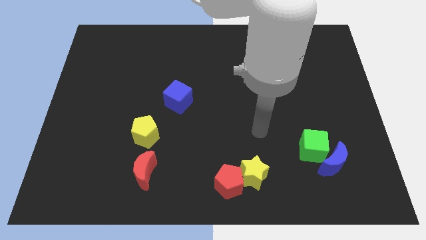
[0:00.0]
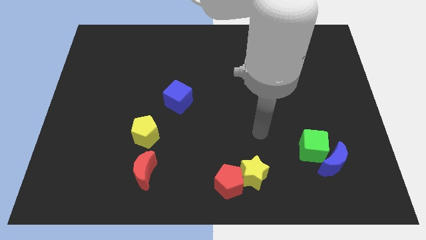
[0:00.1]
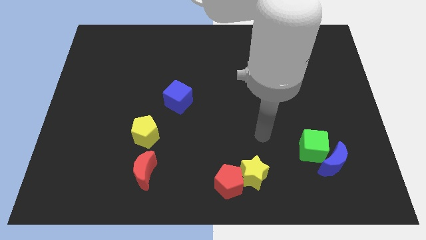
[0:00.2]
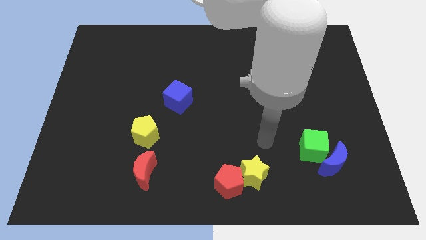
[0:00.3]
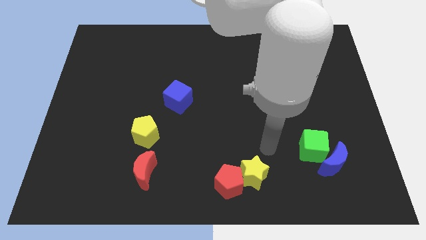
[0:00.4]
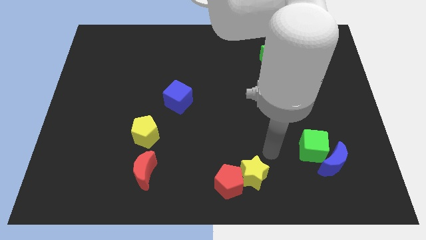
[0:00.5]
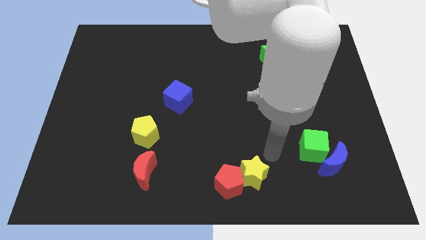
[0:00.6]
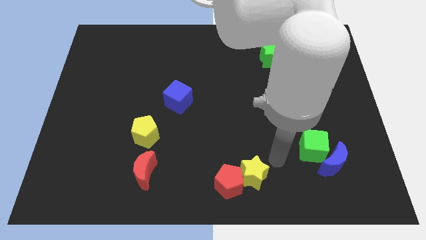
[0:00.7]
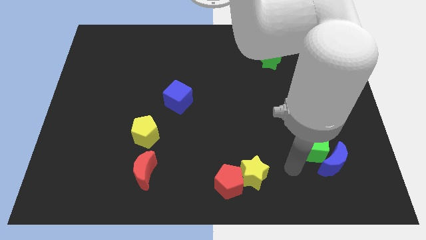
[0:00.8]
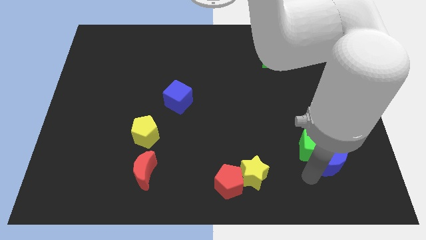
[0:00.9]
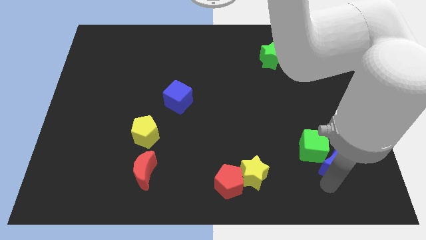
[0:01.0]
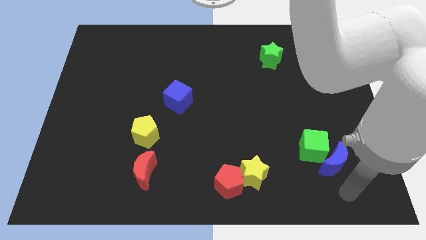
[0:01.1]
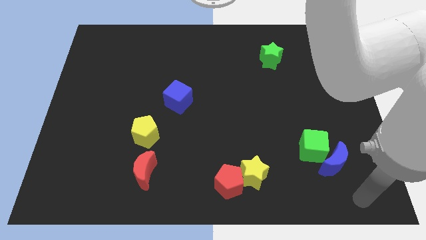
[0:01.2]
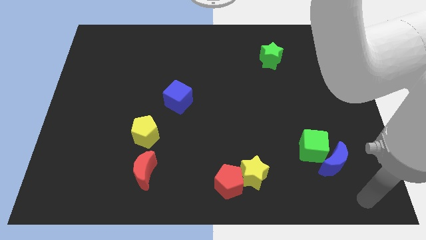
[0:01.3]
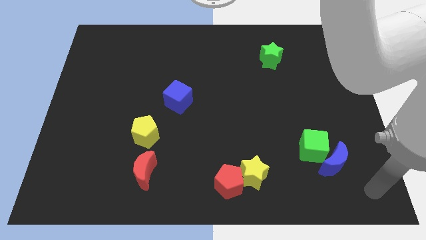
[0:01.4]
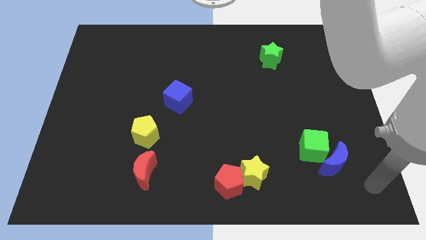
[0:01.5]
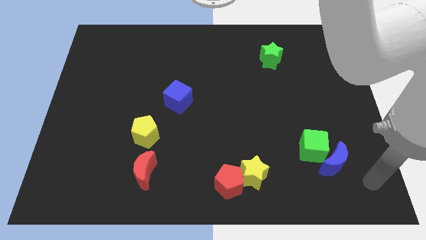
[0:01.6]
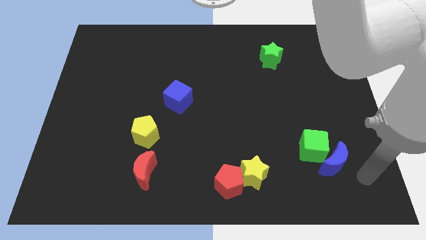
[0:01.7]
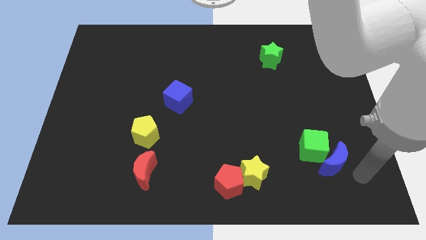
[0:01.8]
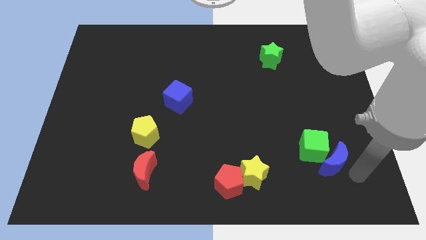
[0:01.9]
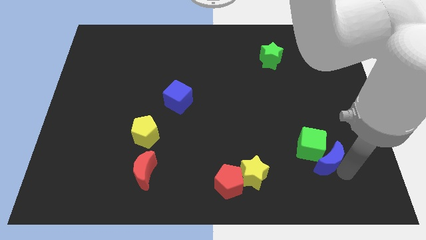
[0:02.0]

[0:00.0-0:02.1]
move your arm close to the blue moon

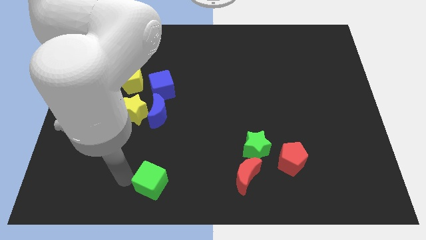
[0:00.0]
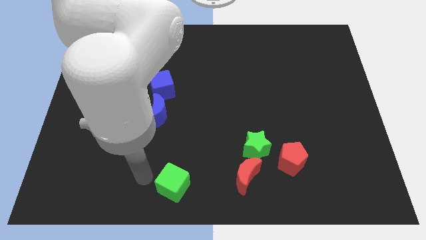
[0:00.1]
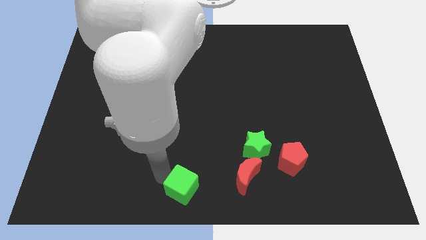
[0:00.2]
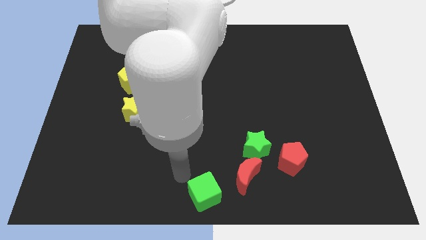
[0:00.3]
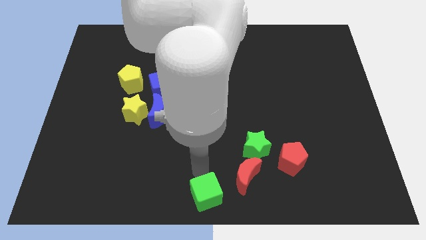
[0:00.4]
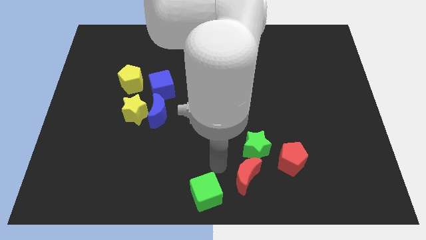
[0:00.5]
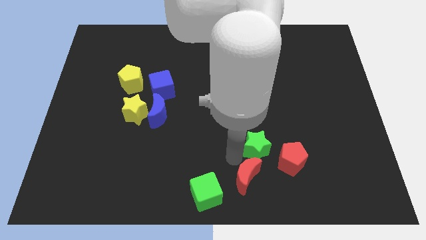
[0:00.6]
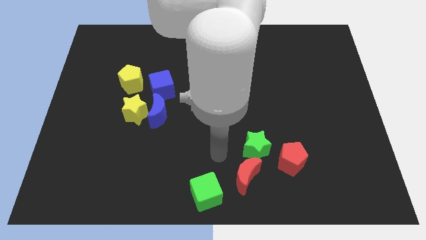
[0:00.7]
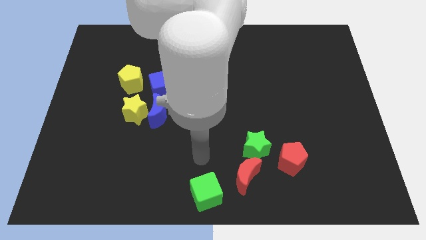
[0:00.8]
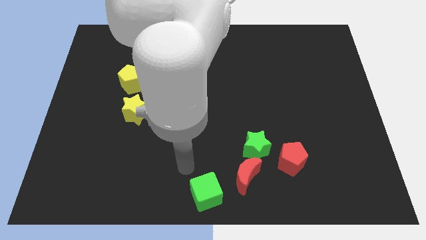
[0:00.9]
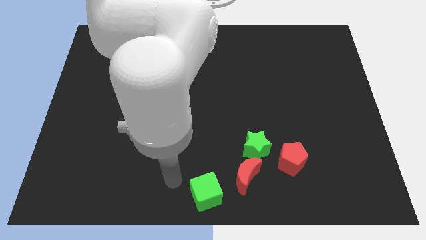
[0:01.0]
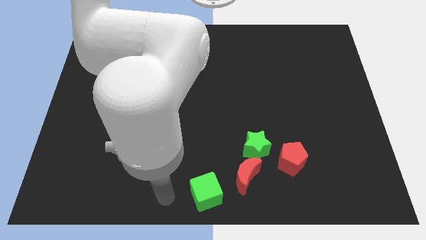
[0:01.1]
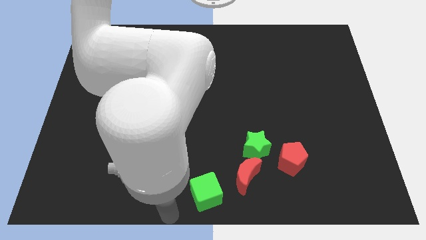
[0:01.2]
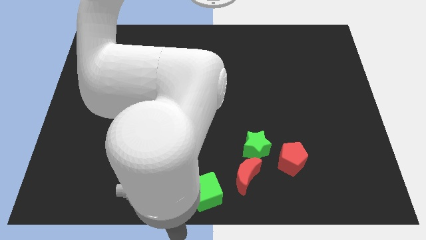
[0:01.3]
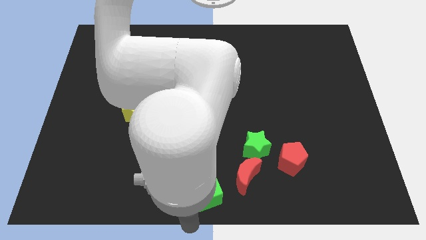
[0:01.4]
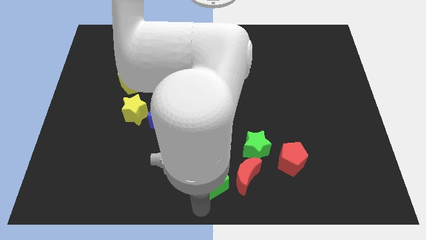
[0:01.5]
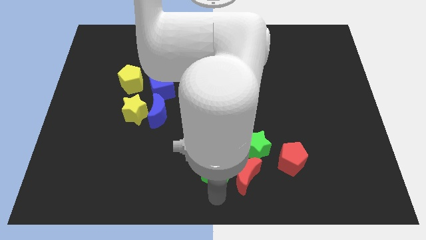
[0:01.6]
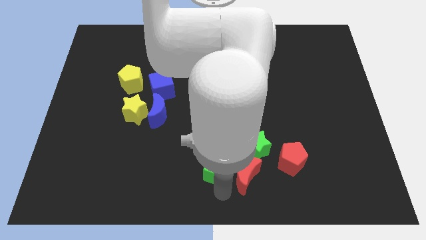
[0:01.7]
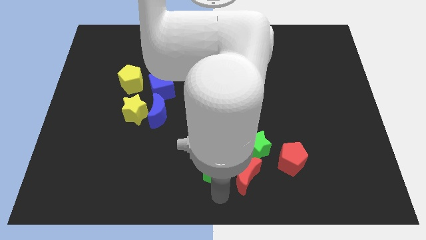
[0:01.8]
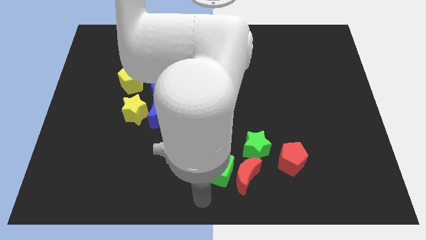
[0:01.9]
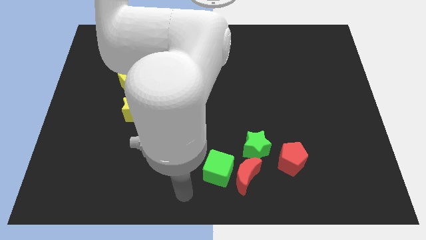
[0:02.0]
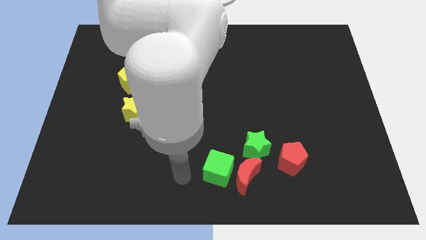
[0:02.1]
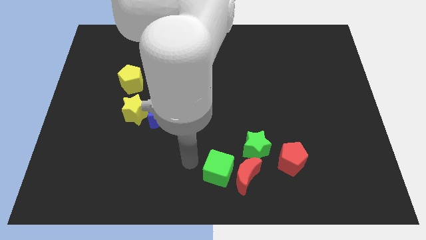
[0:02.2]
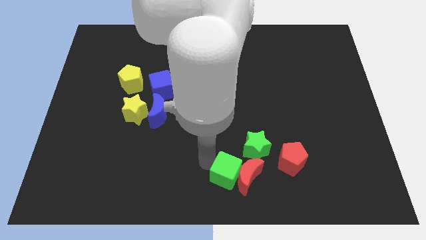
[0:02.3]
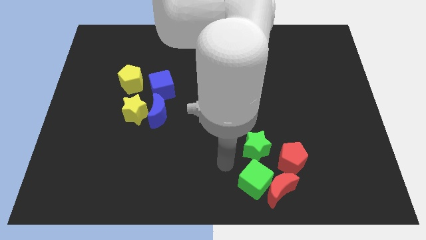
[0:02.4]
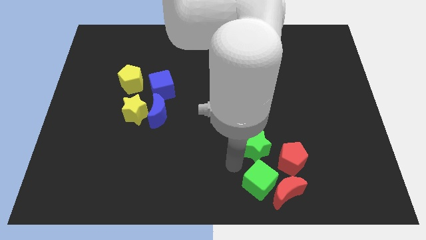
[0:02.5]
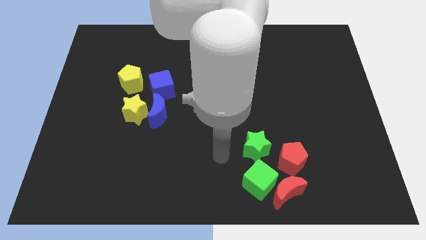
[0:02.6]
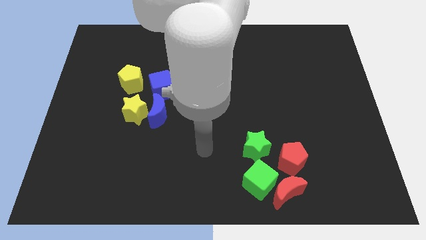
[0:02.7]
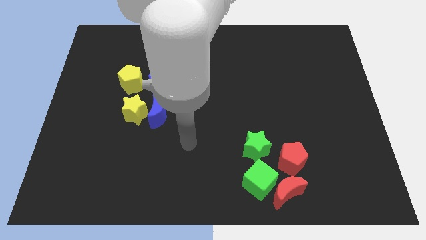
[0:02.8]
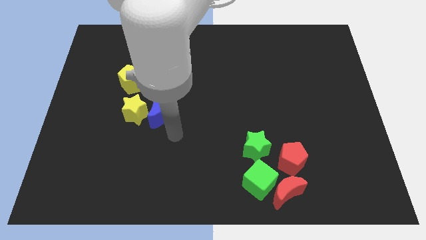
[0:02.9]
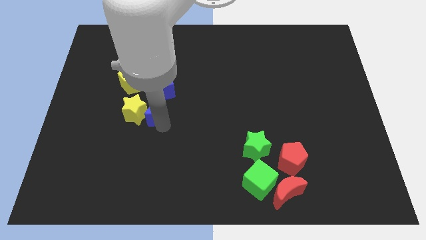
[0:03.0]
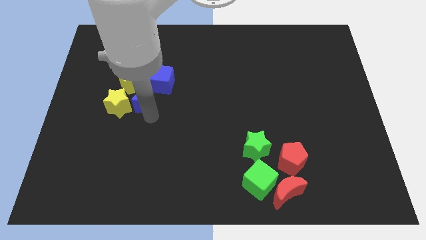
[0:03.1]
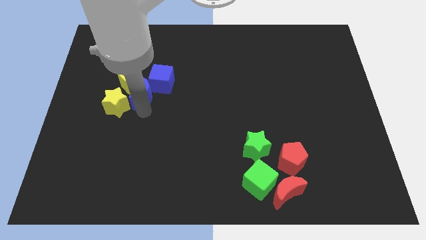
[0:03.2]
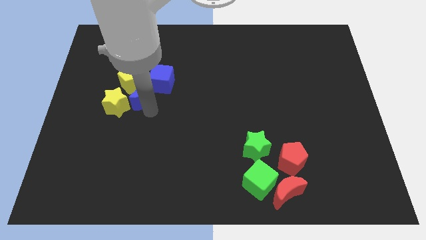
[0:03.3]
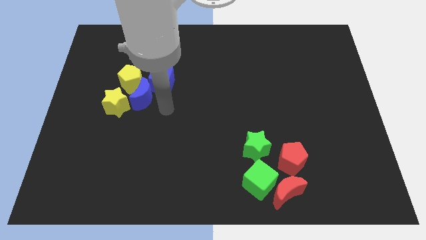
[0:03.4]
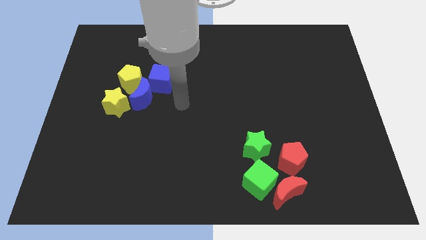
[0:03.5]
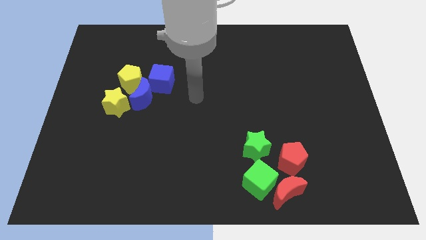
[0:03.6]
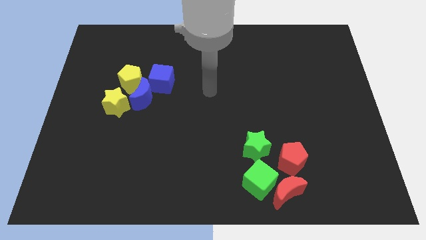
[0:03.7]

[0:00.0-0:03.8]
push the green cube into the red crescent

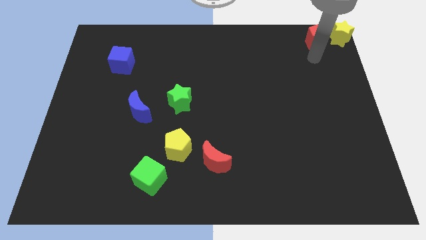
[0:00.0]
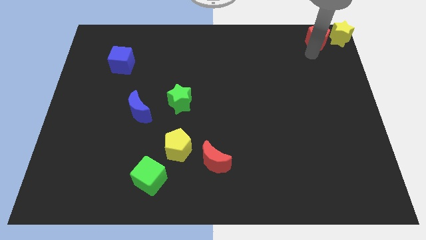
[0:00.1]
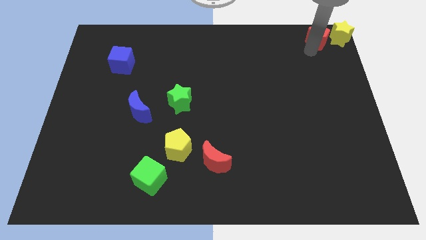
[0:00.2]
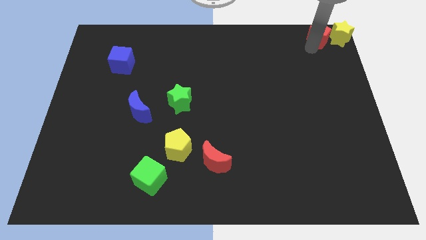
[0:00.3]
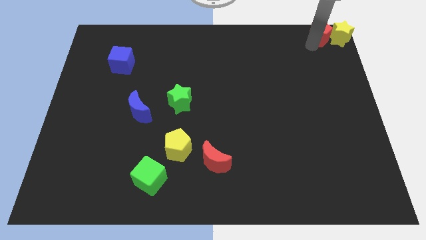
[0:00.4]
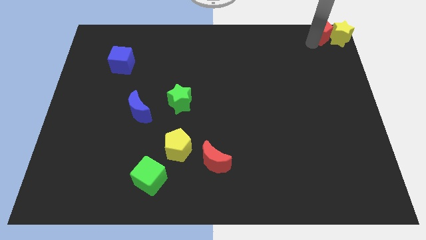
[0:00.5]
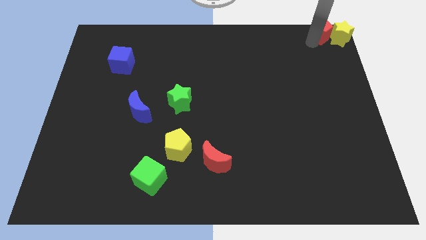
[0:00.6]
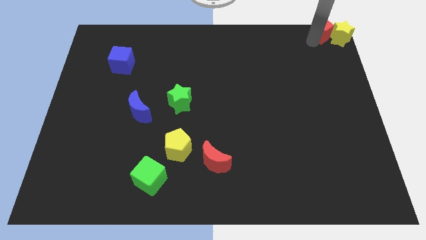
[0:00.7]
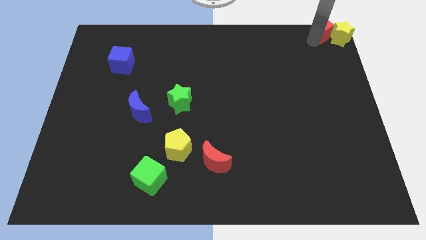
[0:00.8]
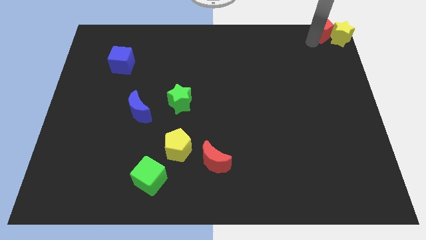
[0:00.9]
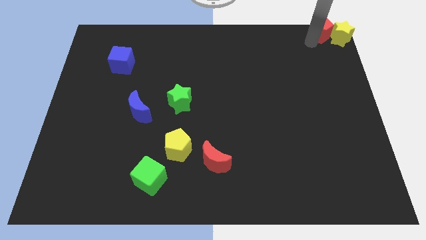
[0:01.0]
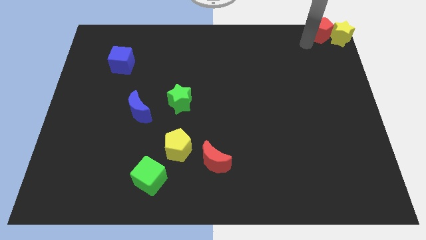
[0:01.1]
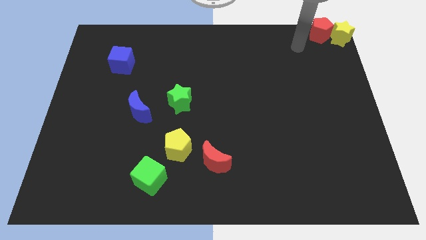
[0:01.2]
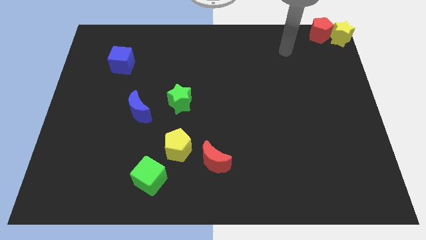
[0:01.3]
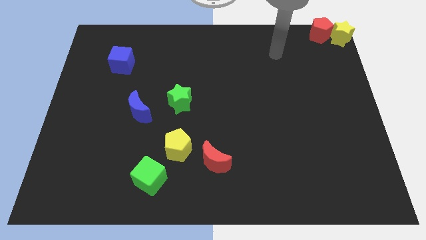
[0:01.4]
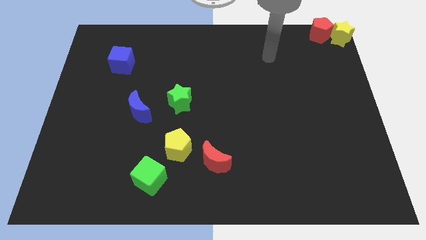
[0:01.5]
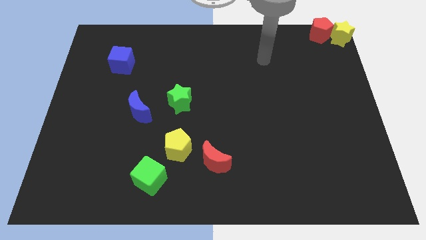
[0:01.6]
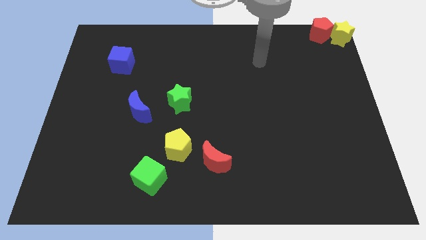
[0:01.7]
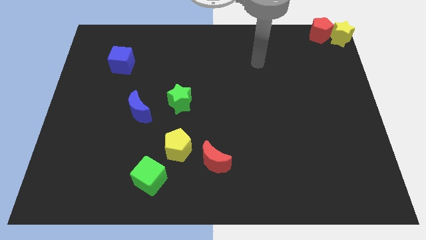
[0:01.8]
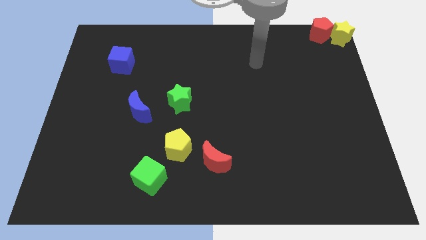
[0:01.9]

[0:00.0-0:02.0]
move the red pentagon to the left of the yellow star

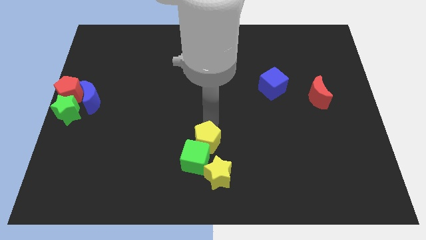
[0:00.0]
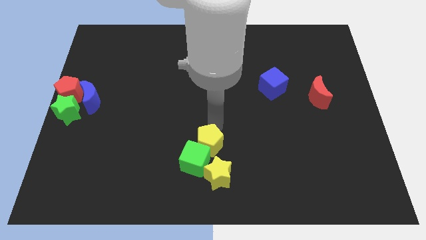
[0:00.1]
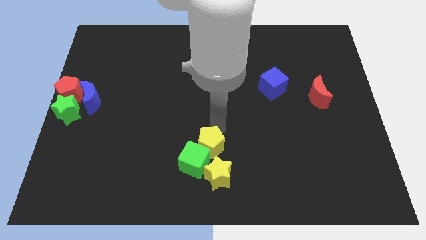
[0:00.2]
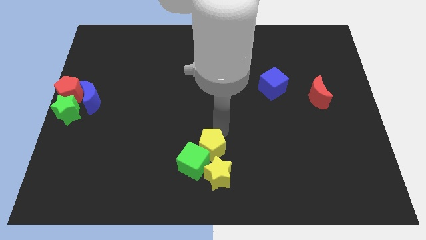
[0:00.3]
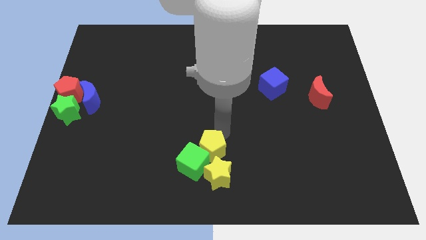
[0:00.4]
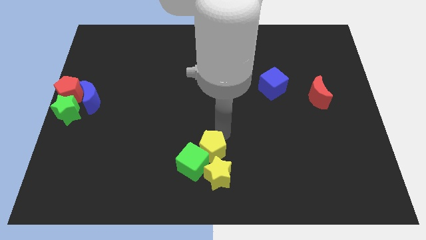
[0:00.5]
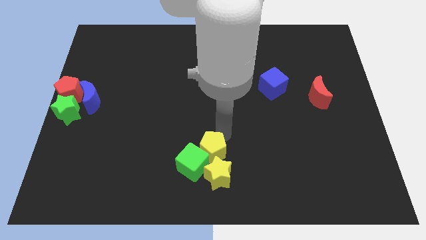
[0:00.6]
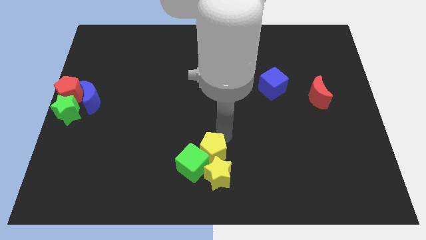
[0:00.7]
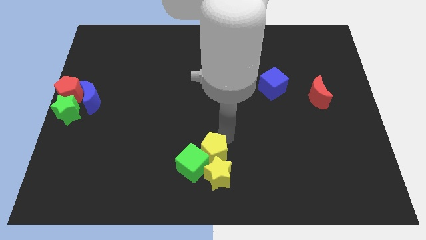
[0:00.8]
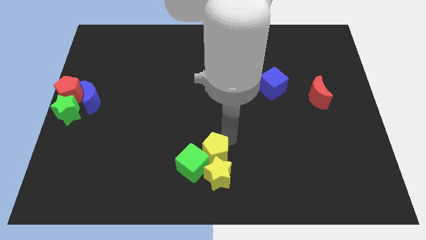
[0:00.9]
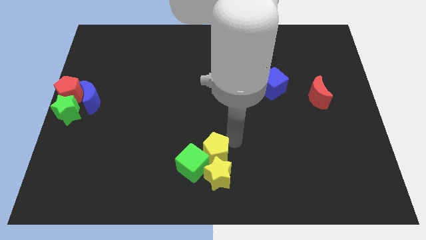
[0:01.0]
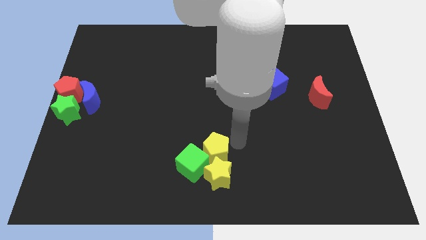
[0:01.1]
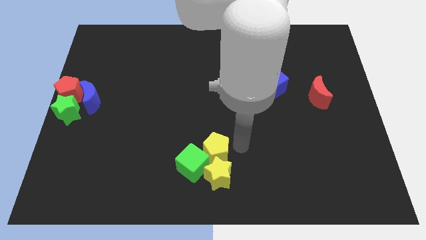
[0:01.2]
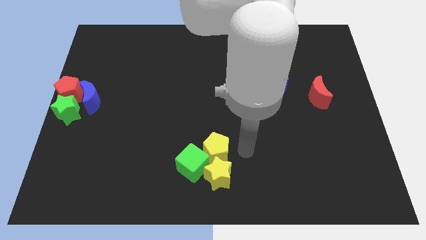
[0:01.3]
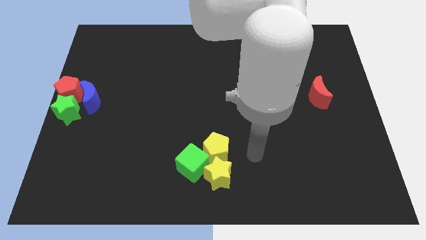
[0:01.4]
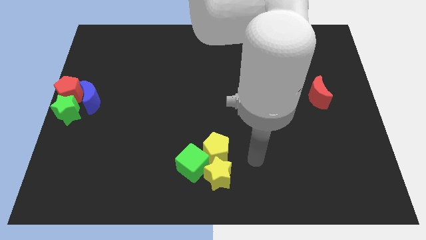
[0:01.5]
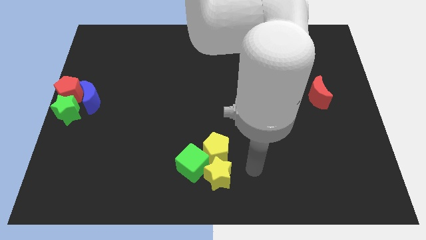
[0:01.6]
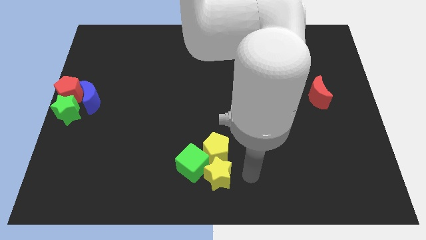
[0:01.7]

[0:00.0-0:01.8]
place the yellow pentagon above the yellow star
